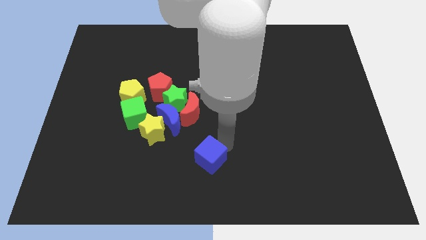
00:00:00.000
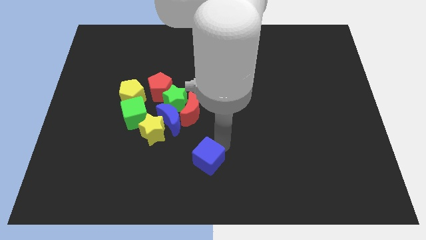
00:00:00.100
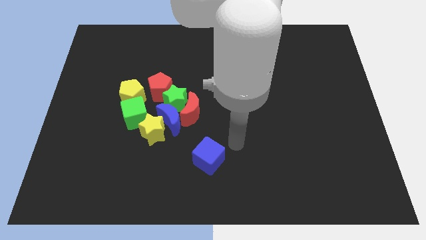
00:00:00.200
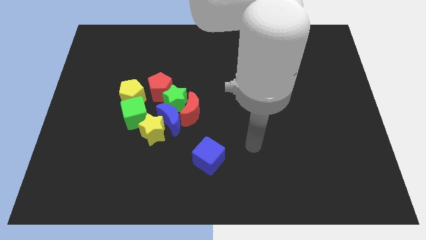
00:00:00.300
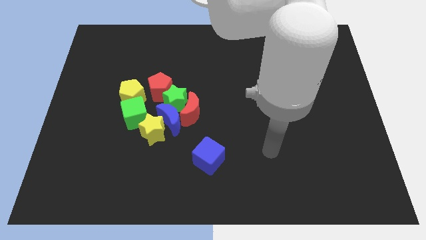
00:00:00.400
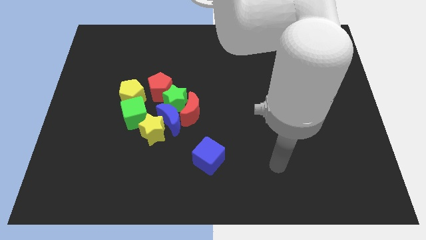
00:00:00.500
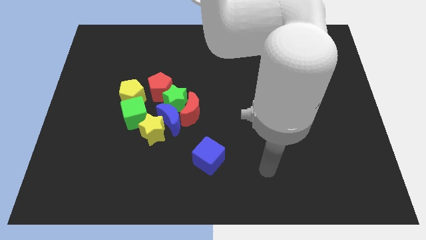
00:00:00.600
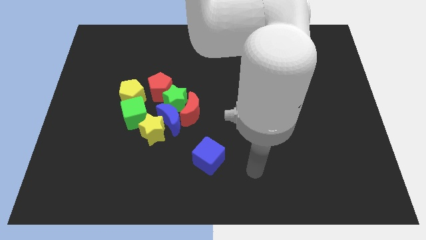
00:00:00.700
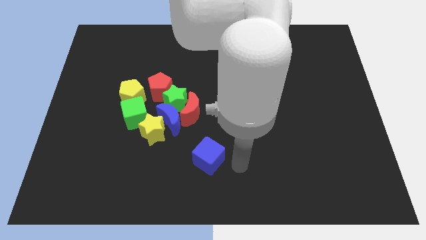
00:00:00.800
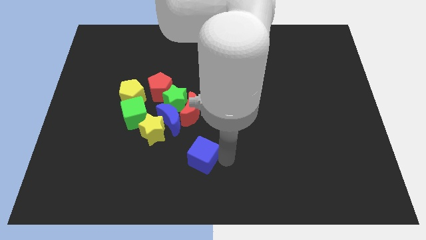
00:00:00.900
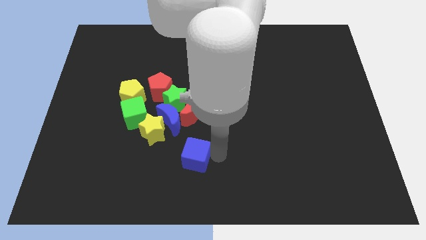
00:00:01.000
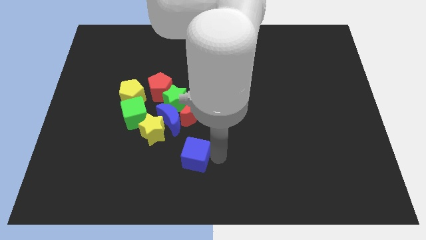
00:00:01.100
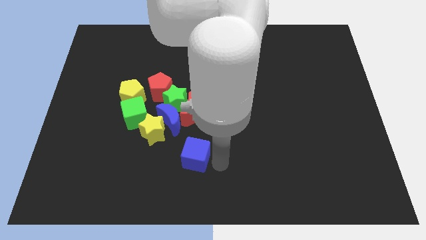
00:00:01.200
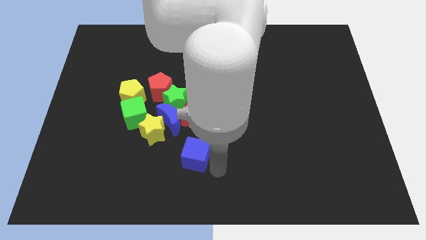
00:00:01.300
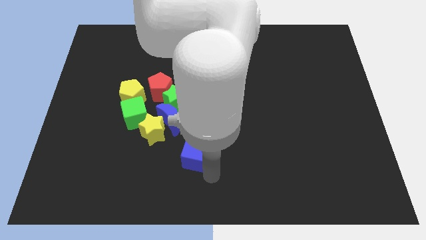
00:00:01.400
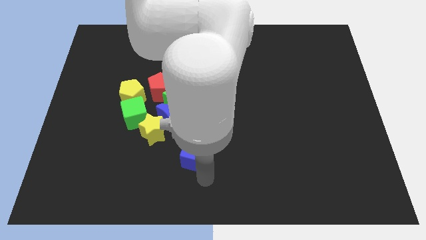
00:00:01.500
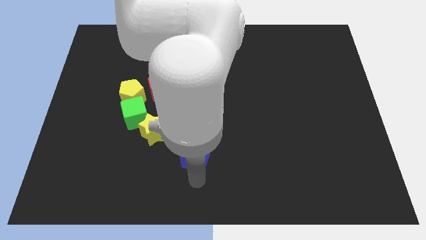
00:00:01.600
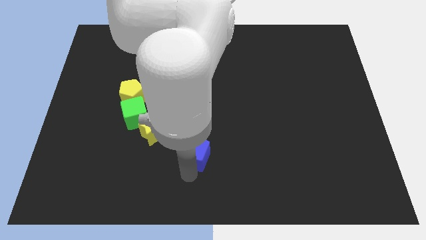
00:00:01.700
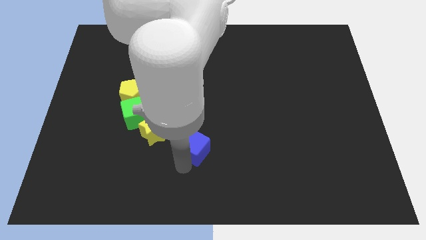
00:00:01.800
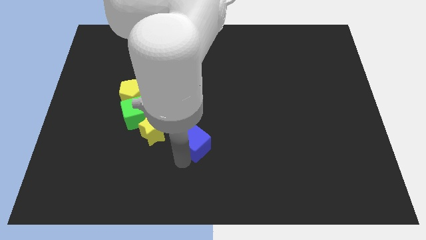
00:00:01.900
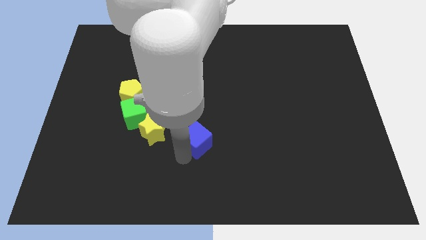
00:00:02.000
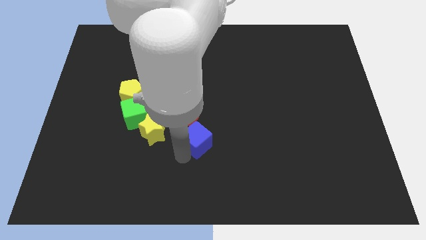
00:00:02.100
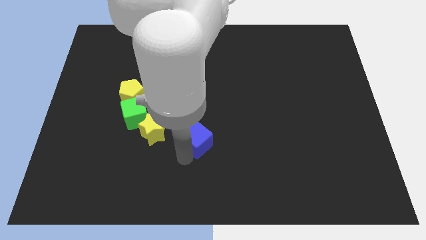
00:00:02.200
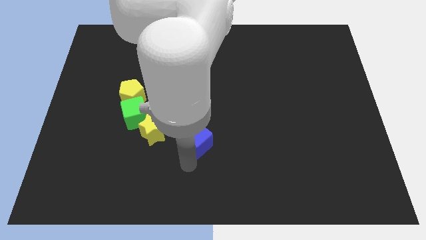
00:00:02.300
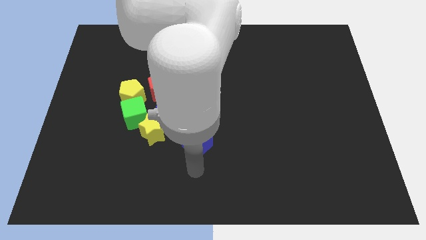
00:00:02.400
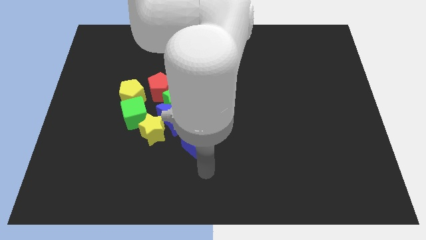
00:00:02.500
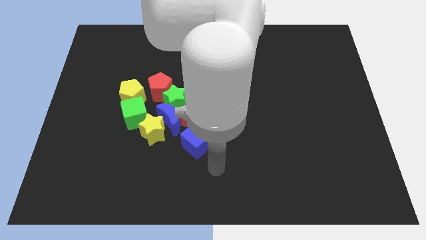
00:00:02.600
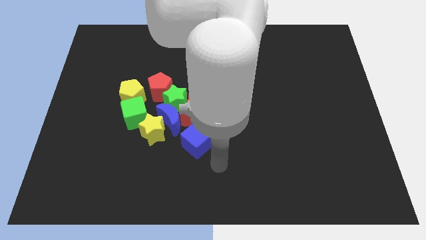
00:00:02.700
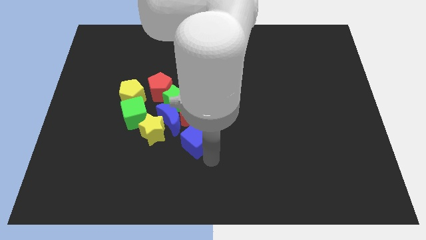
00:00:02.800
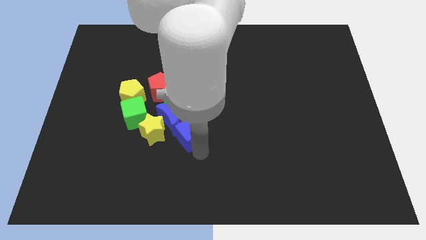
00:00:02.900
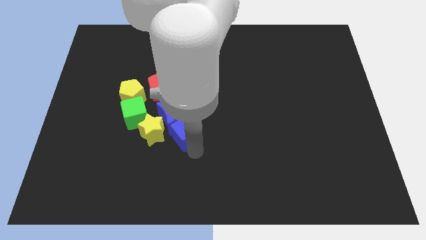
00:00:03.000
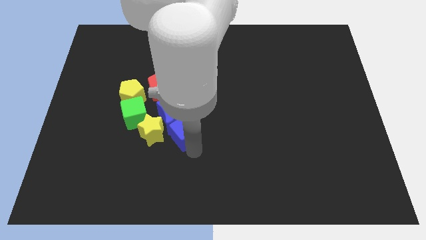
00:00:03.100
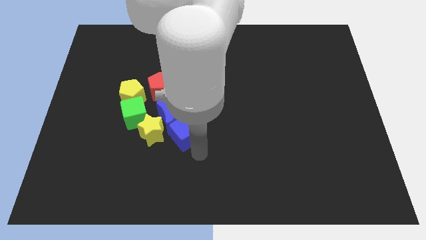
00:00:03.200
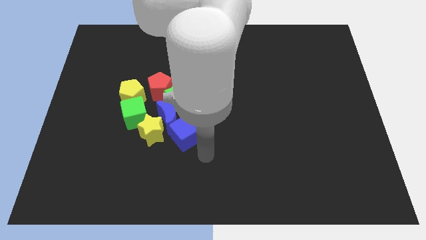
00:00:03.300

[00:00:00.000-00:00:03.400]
drag the blue cube into the group of blocks

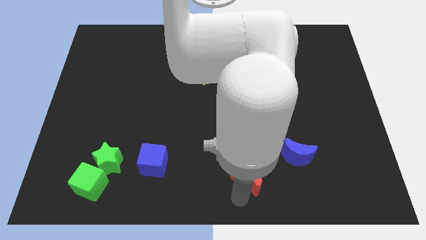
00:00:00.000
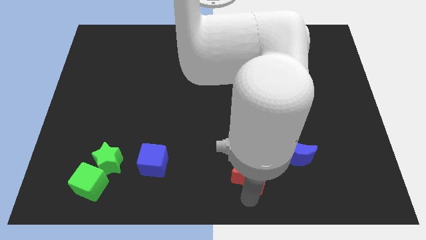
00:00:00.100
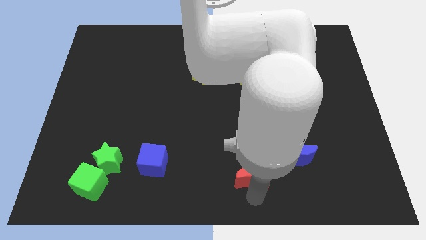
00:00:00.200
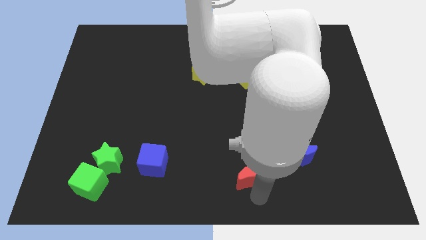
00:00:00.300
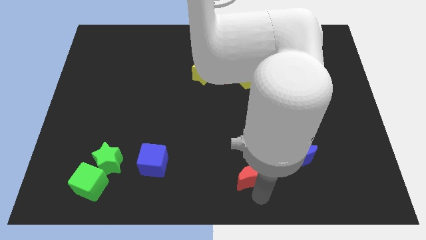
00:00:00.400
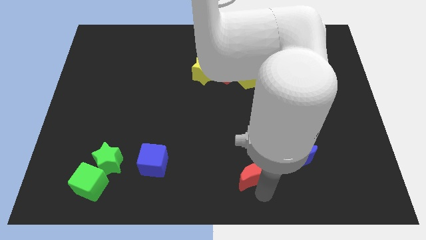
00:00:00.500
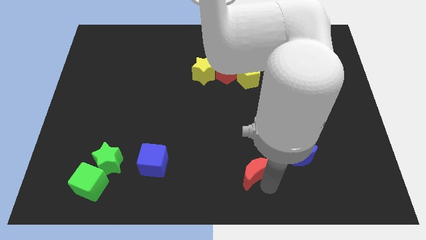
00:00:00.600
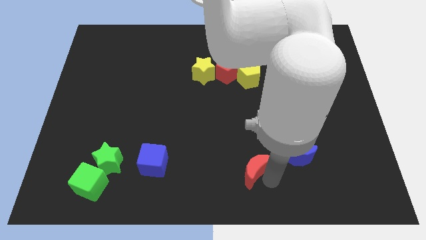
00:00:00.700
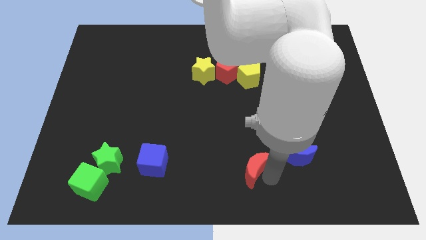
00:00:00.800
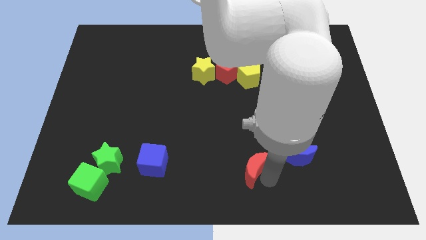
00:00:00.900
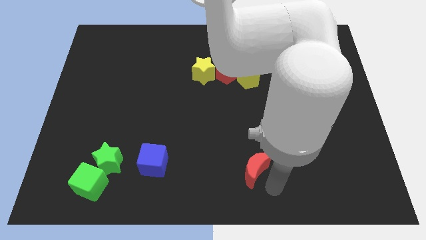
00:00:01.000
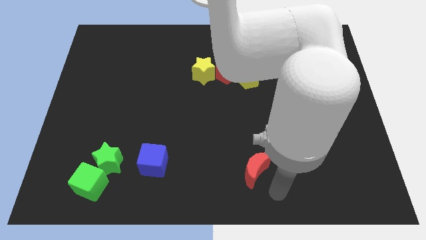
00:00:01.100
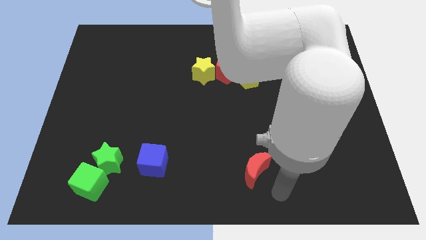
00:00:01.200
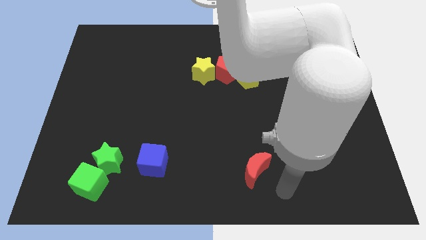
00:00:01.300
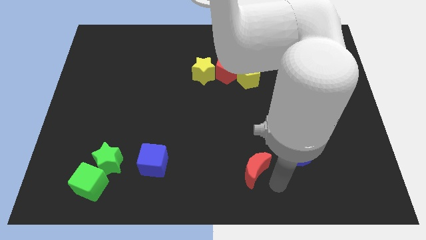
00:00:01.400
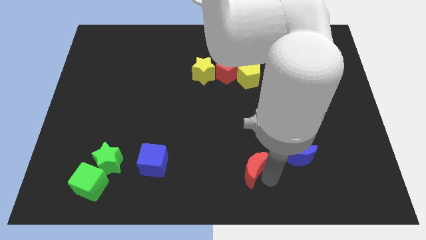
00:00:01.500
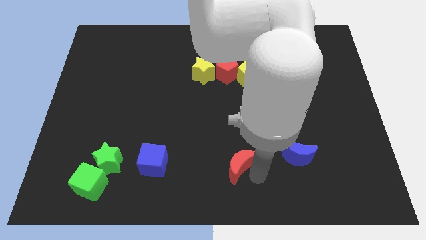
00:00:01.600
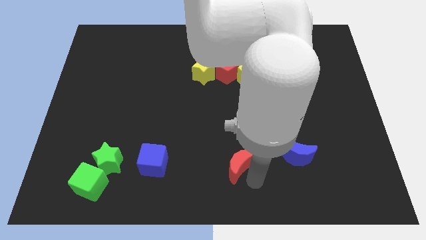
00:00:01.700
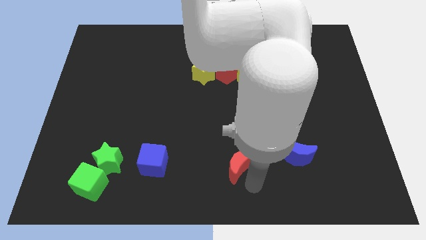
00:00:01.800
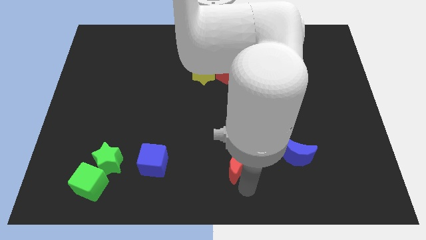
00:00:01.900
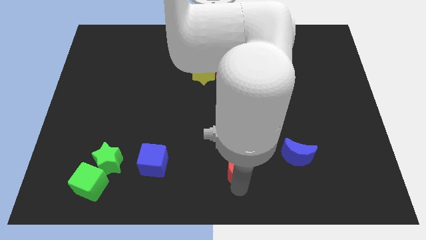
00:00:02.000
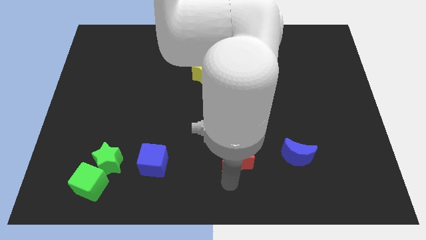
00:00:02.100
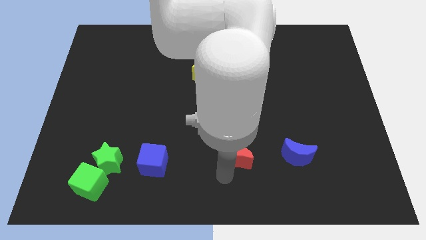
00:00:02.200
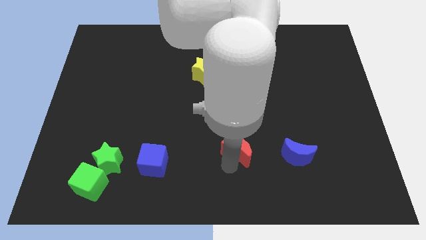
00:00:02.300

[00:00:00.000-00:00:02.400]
push the red crescent left to the blue crescent

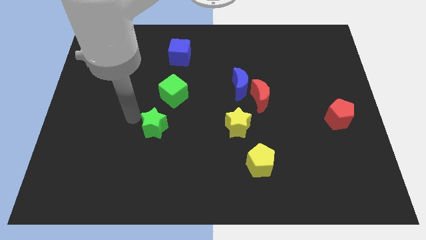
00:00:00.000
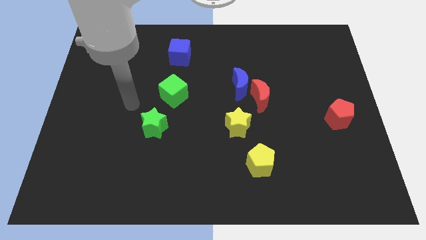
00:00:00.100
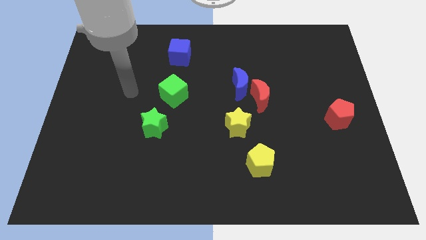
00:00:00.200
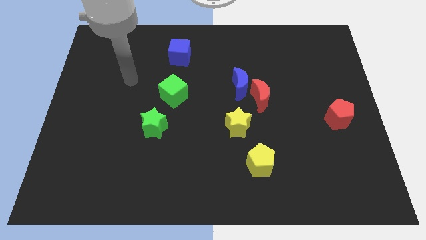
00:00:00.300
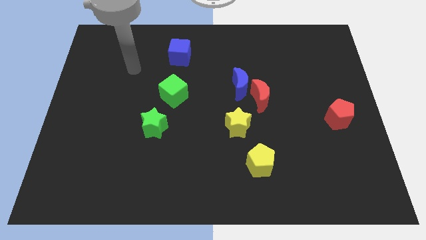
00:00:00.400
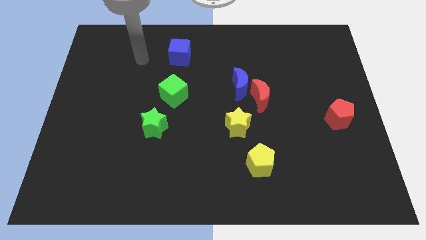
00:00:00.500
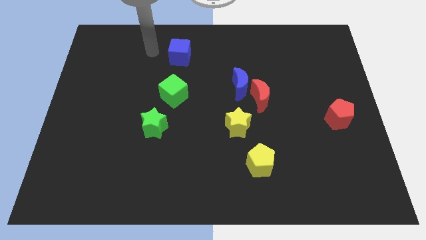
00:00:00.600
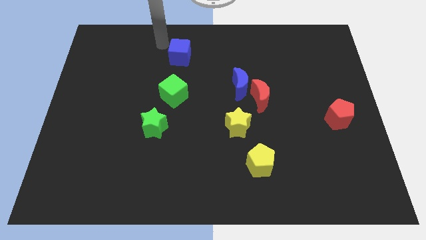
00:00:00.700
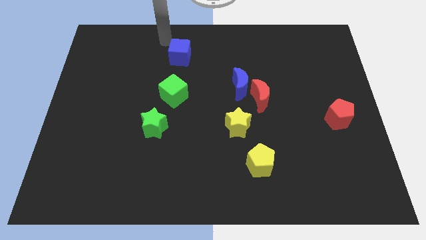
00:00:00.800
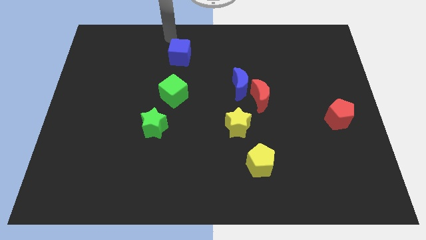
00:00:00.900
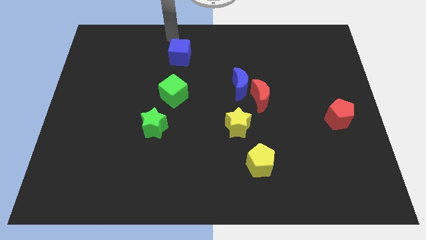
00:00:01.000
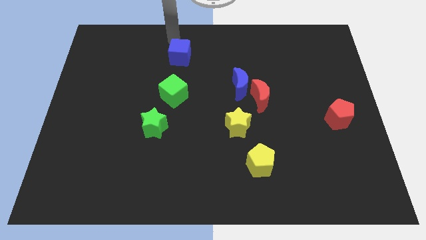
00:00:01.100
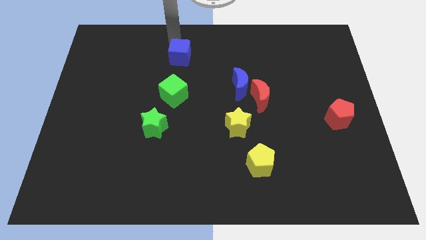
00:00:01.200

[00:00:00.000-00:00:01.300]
point your arm at the top of the blue cube

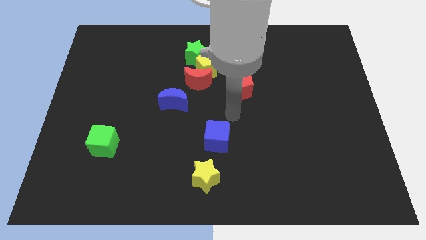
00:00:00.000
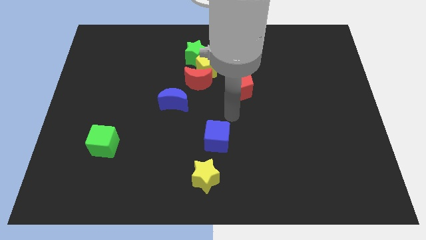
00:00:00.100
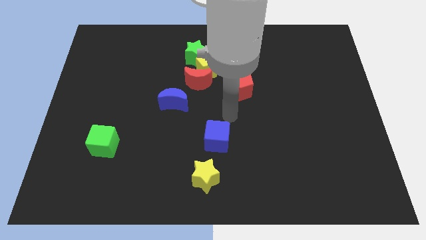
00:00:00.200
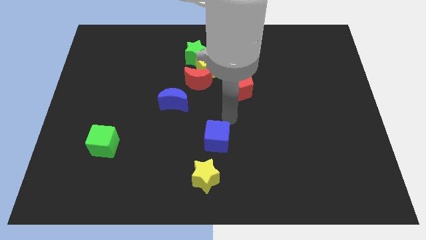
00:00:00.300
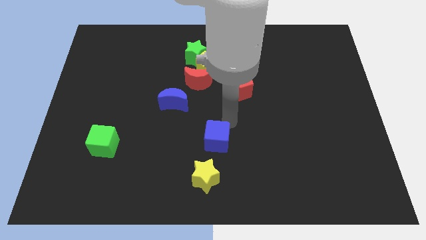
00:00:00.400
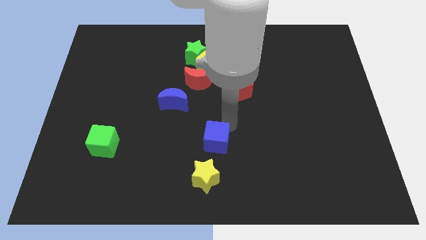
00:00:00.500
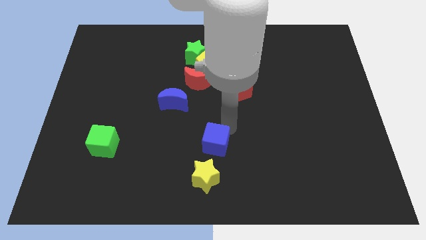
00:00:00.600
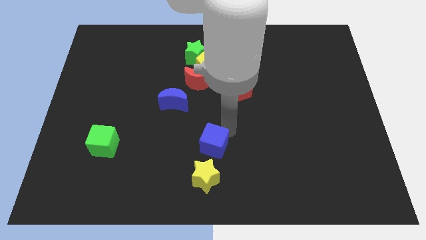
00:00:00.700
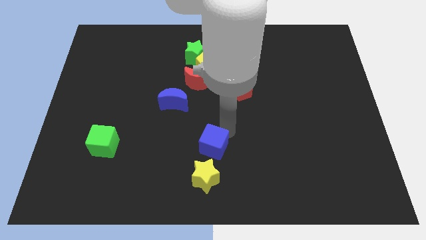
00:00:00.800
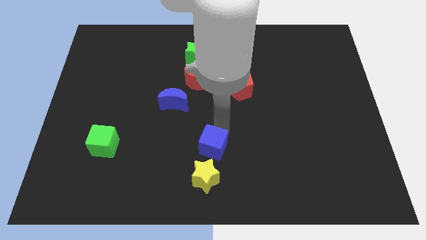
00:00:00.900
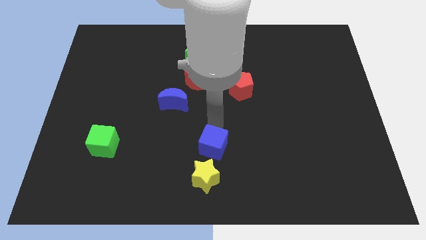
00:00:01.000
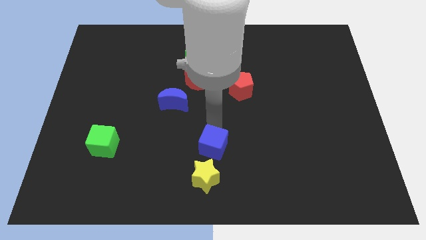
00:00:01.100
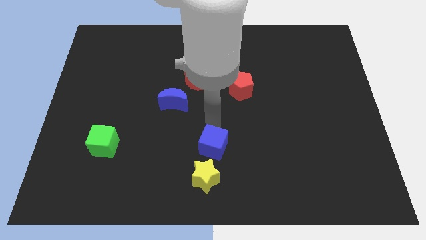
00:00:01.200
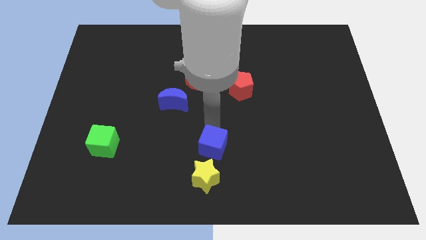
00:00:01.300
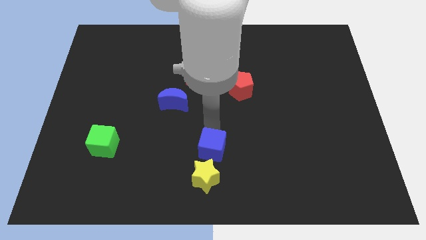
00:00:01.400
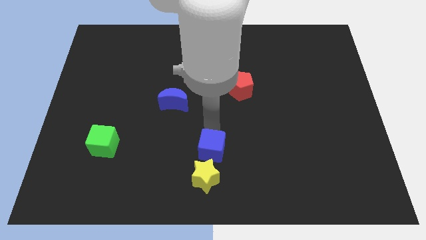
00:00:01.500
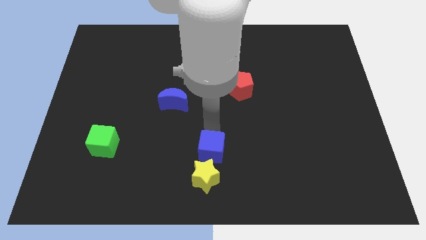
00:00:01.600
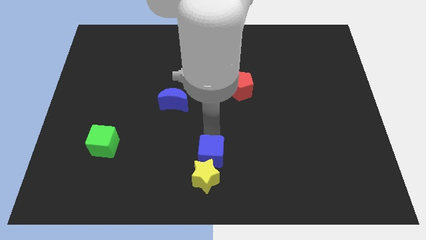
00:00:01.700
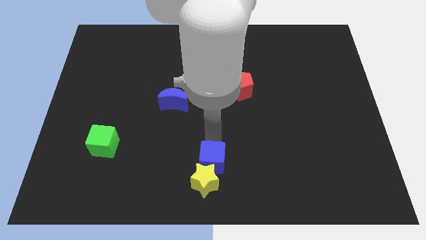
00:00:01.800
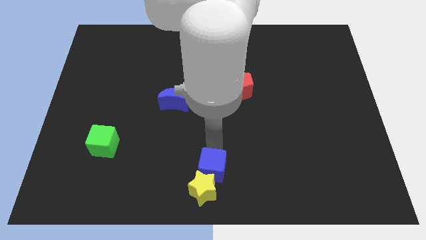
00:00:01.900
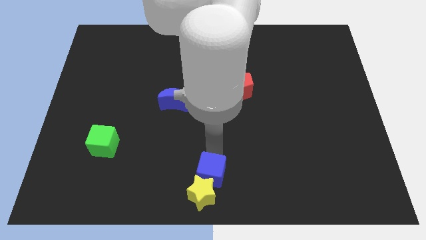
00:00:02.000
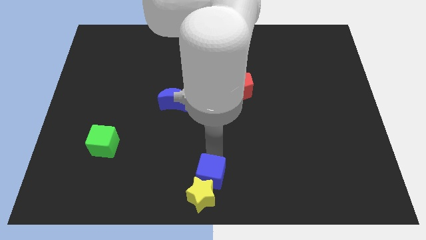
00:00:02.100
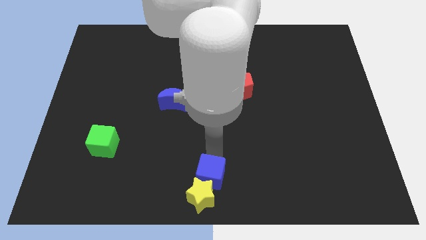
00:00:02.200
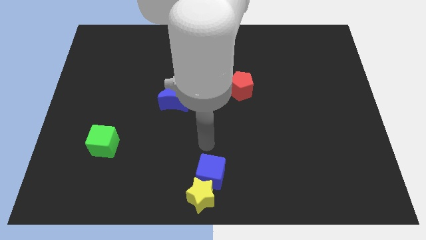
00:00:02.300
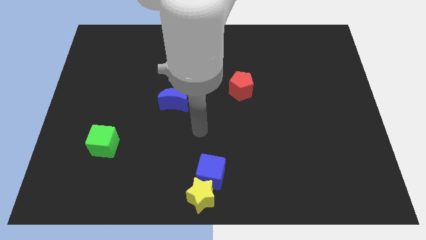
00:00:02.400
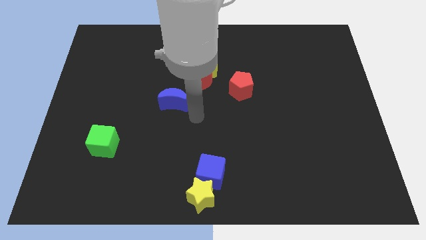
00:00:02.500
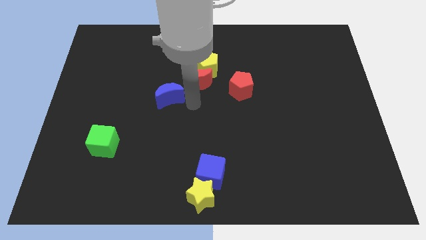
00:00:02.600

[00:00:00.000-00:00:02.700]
push the blue cube and yellow star to the center bottom of the board
